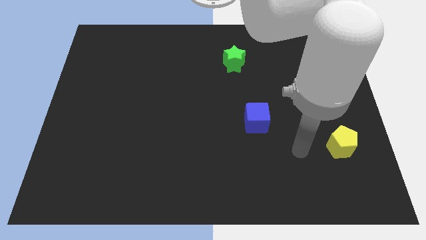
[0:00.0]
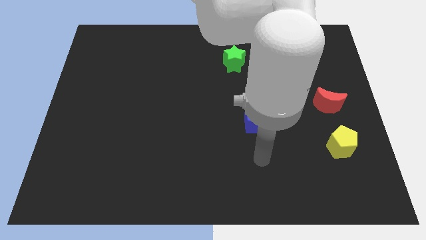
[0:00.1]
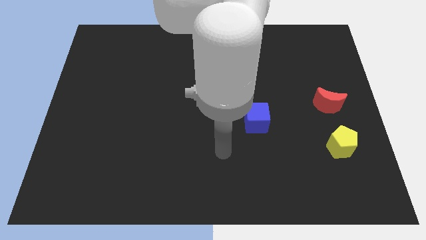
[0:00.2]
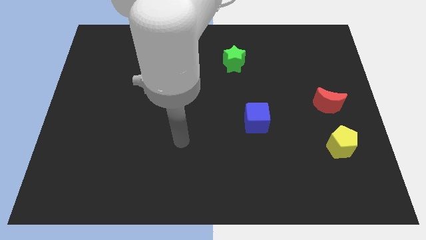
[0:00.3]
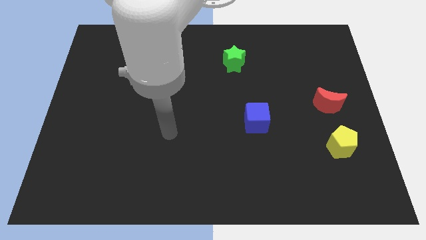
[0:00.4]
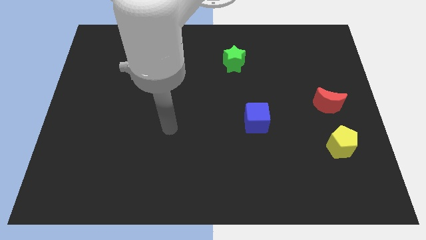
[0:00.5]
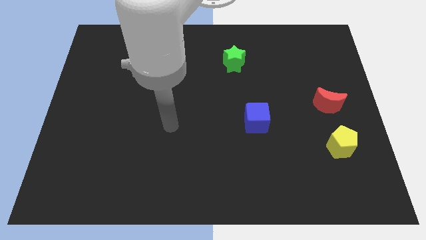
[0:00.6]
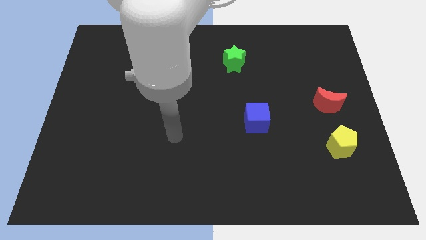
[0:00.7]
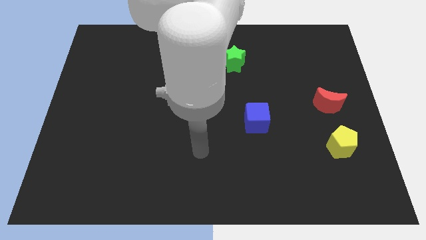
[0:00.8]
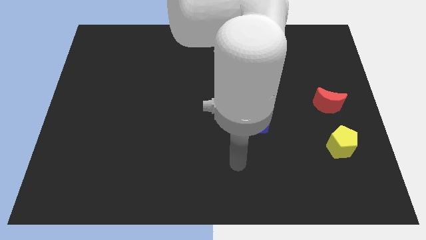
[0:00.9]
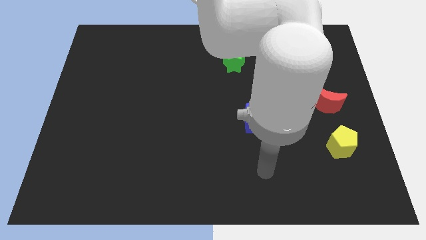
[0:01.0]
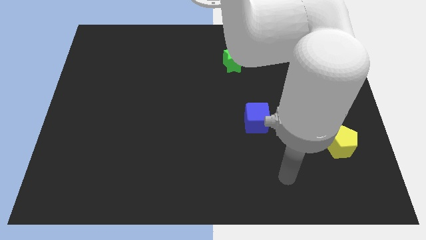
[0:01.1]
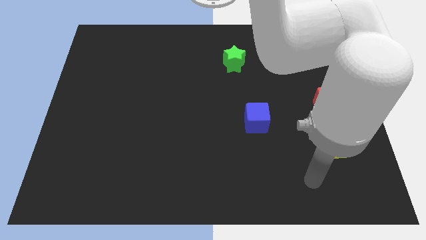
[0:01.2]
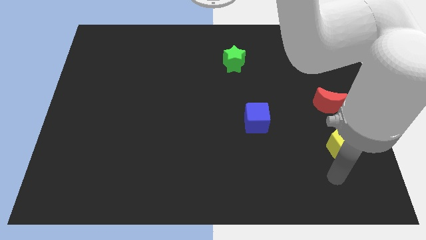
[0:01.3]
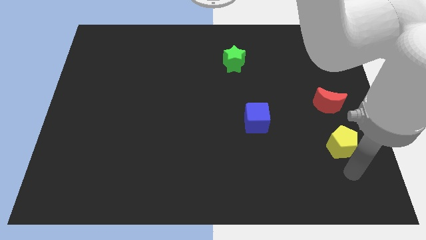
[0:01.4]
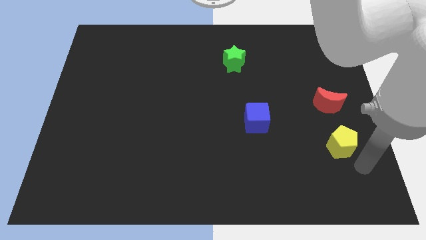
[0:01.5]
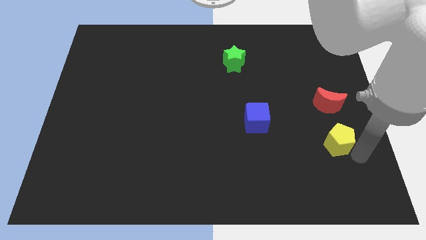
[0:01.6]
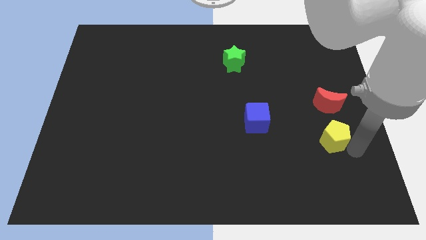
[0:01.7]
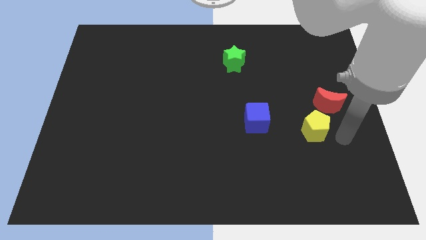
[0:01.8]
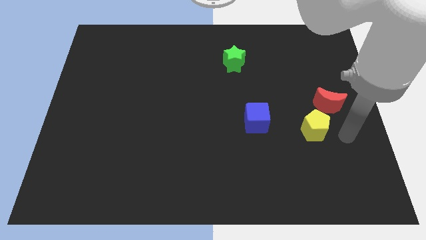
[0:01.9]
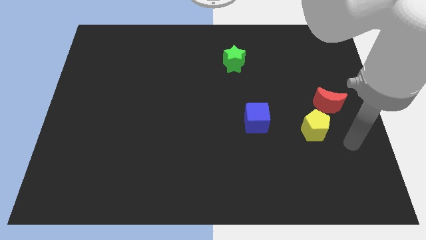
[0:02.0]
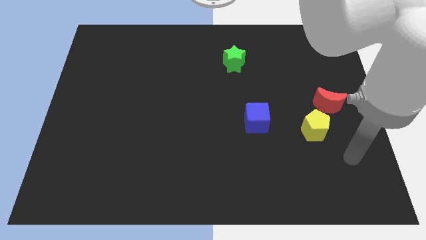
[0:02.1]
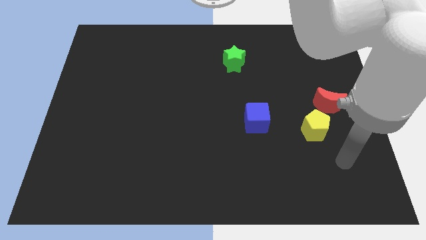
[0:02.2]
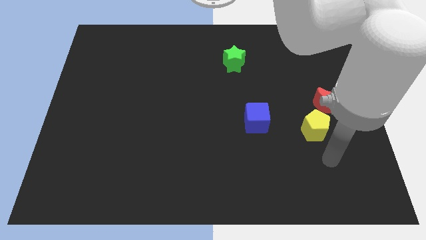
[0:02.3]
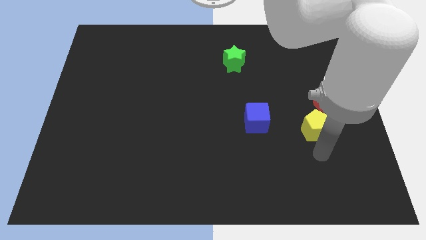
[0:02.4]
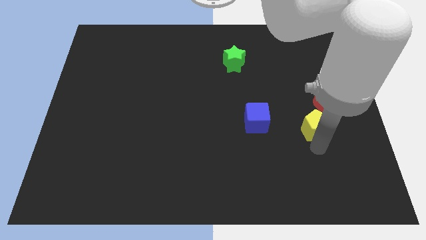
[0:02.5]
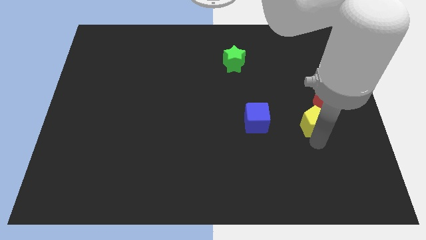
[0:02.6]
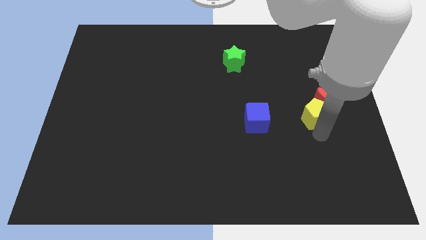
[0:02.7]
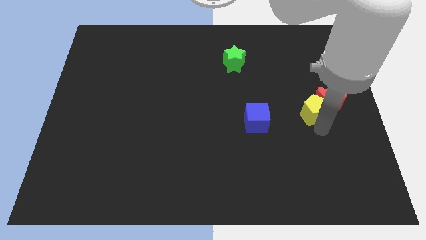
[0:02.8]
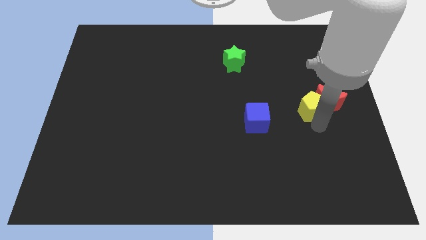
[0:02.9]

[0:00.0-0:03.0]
put the yellow block towards the red block

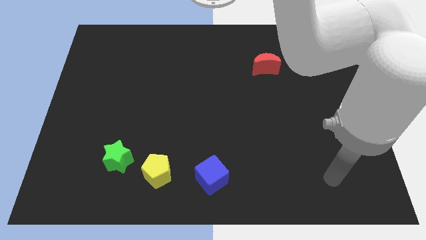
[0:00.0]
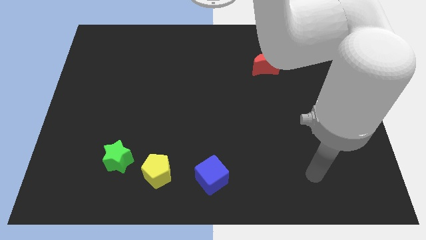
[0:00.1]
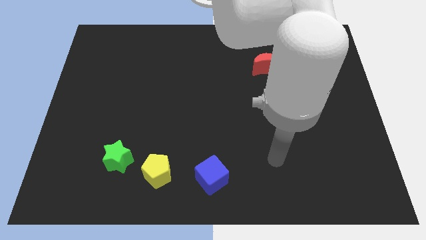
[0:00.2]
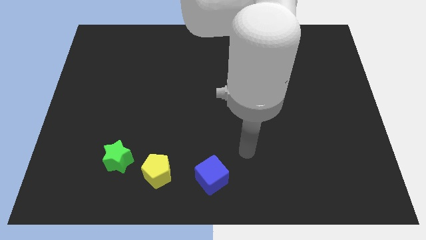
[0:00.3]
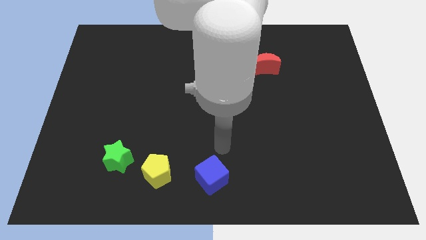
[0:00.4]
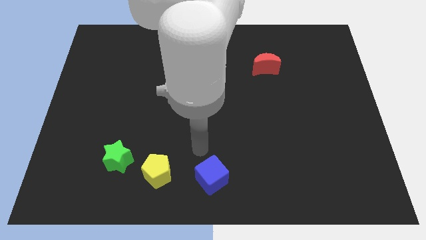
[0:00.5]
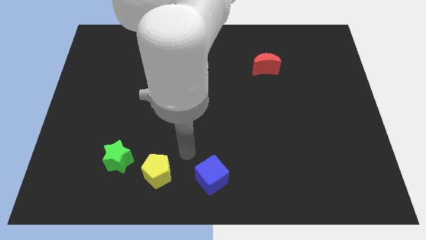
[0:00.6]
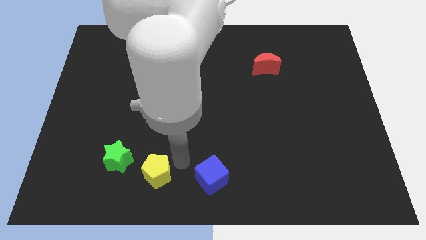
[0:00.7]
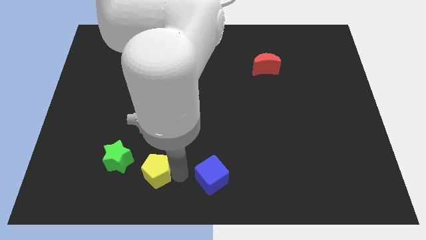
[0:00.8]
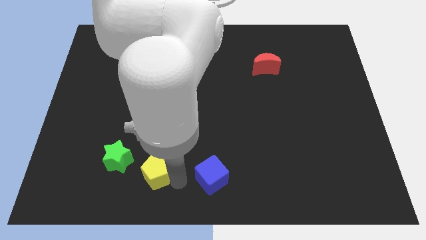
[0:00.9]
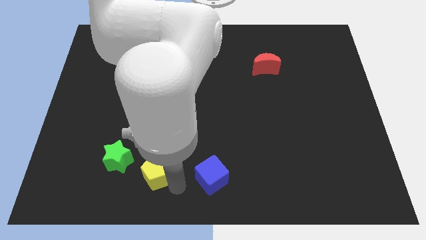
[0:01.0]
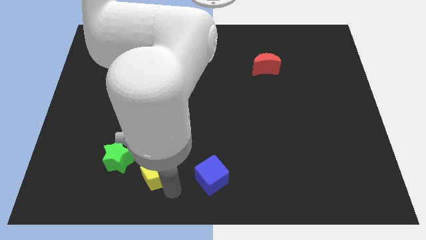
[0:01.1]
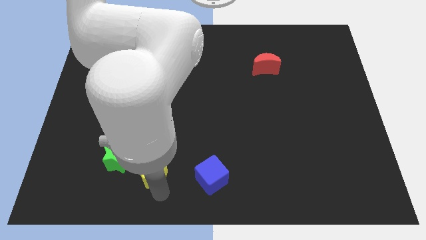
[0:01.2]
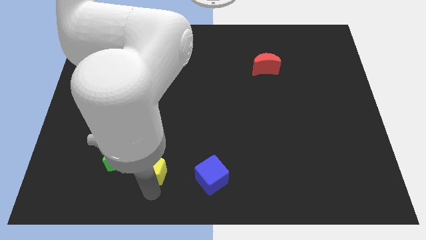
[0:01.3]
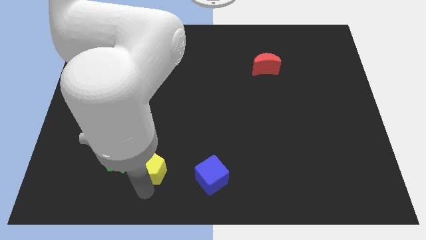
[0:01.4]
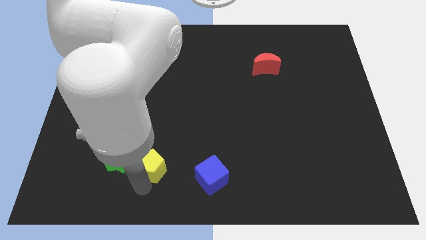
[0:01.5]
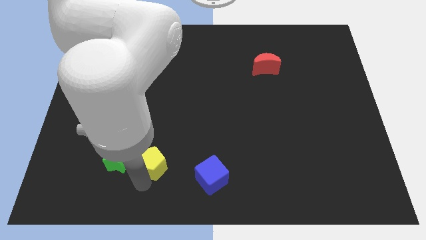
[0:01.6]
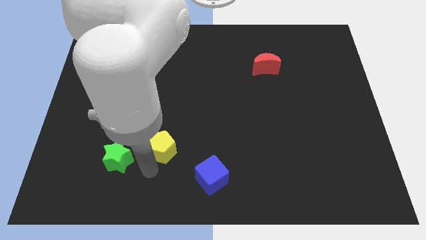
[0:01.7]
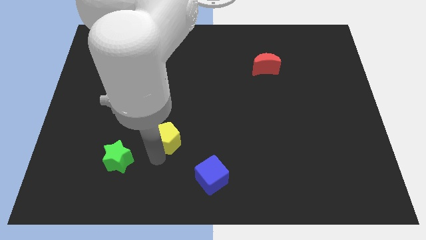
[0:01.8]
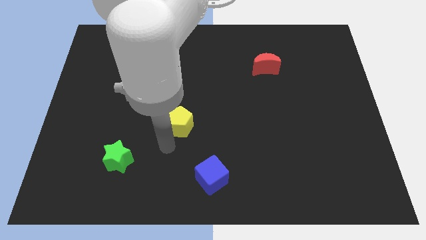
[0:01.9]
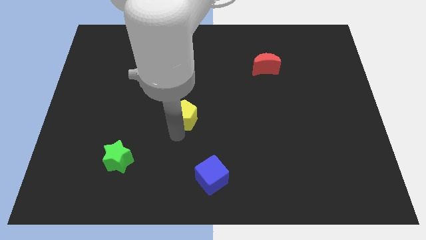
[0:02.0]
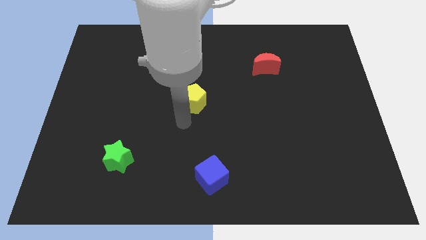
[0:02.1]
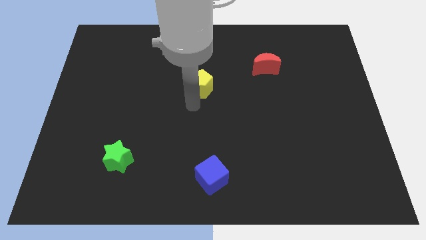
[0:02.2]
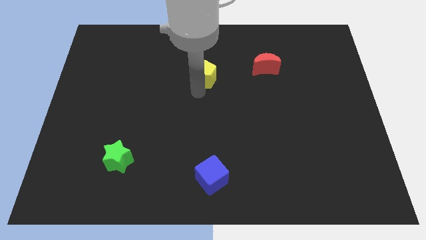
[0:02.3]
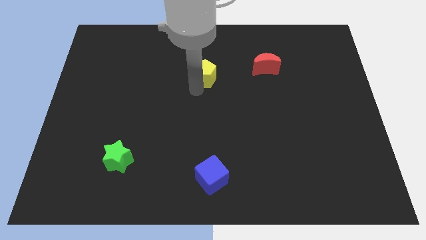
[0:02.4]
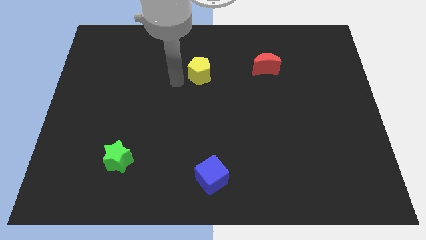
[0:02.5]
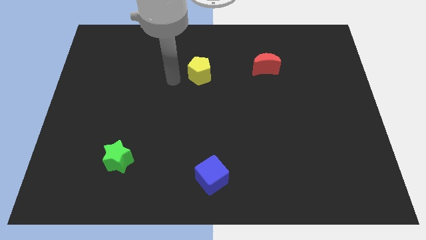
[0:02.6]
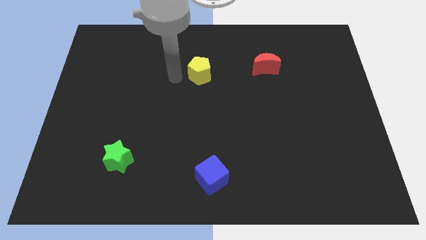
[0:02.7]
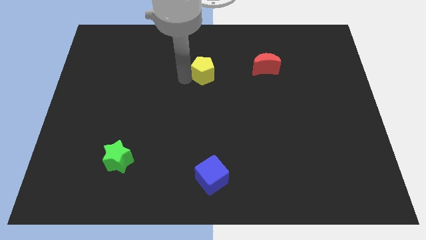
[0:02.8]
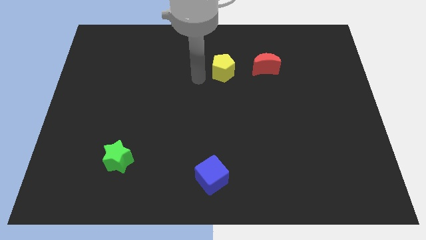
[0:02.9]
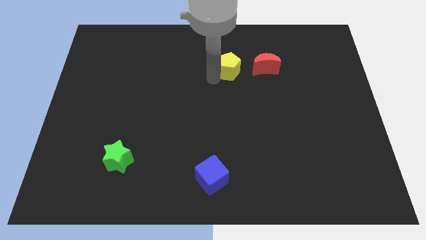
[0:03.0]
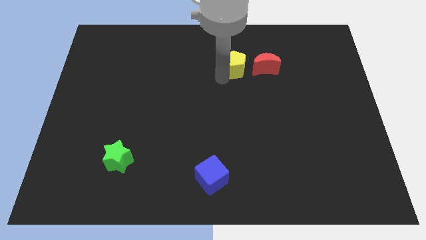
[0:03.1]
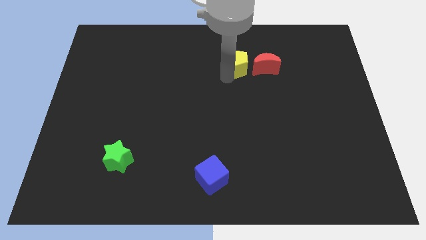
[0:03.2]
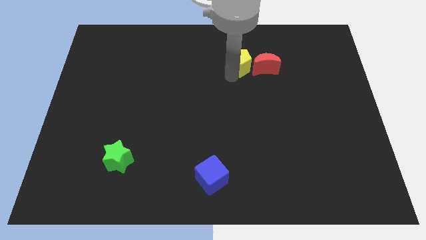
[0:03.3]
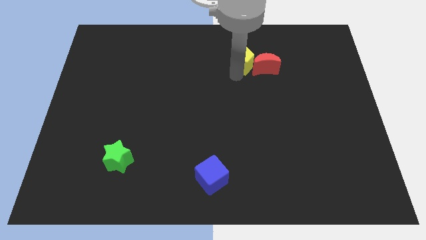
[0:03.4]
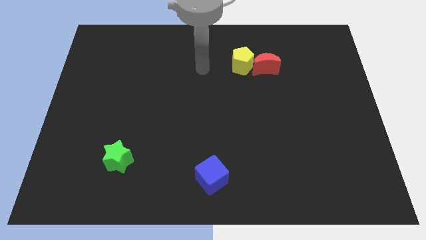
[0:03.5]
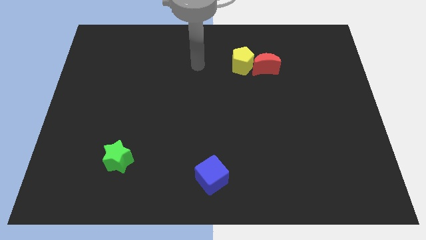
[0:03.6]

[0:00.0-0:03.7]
slide the yellow block next to the red block

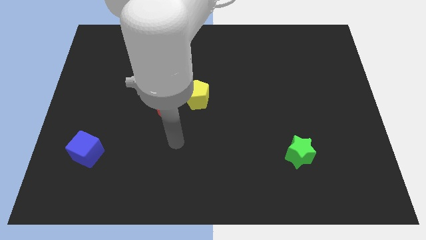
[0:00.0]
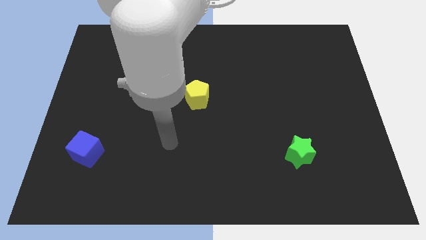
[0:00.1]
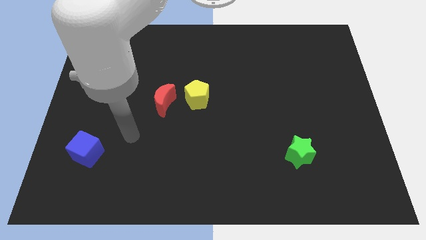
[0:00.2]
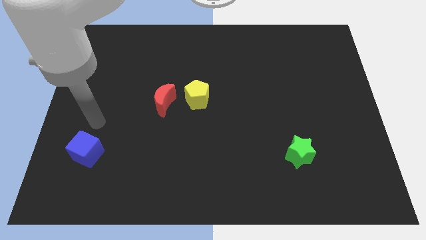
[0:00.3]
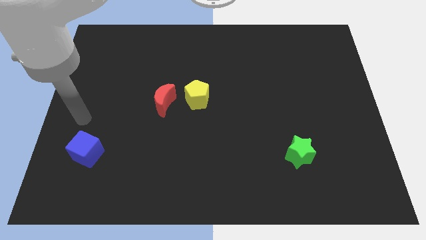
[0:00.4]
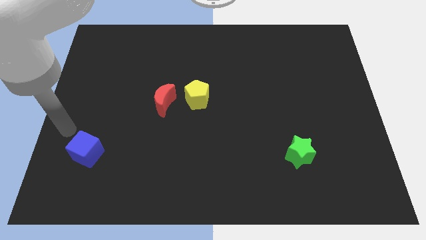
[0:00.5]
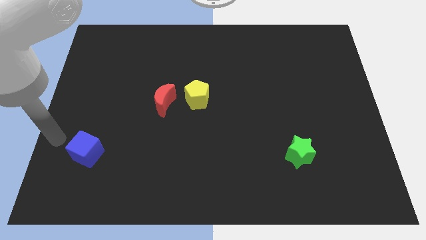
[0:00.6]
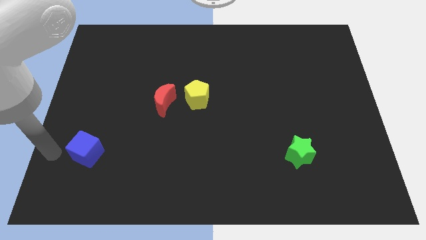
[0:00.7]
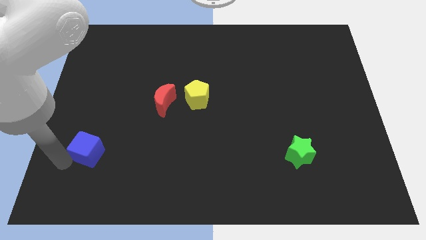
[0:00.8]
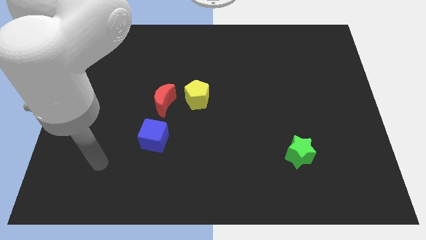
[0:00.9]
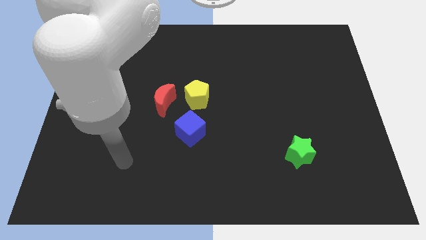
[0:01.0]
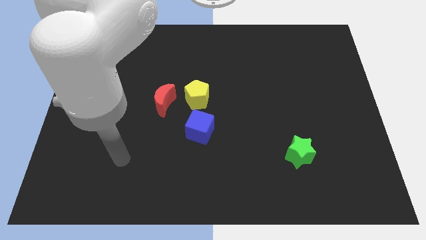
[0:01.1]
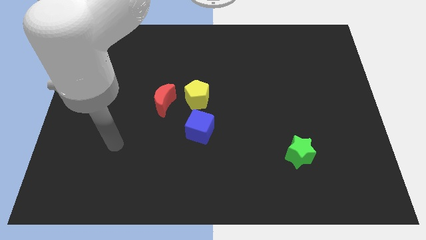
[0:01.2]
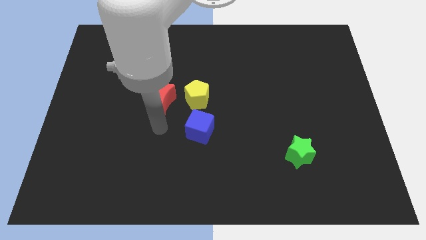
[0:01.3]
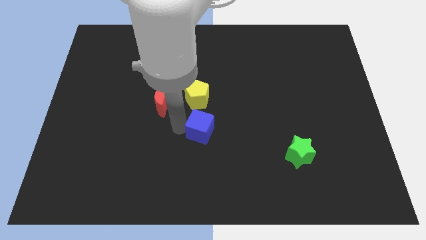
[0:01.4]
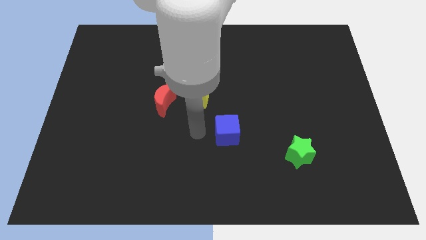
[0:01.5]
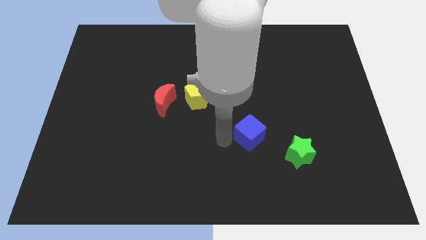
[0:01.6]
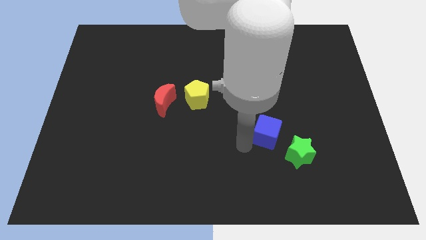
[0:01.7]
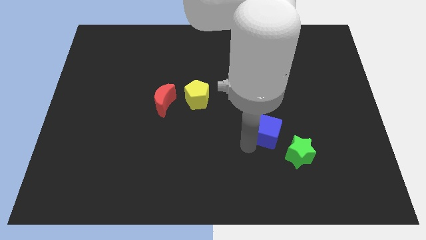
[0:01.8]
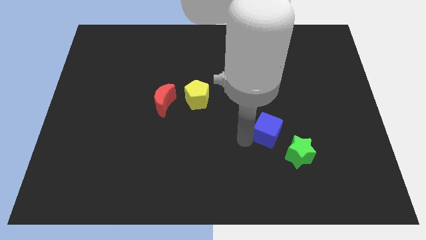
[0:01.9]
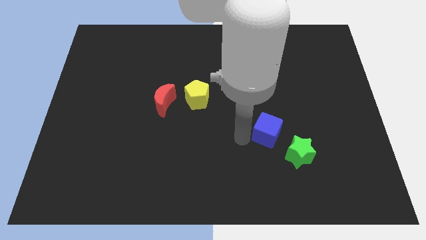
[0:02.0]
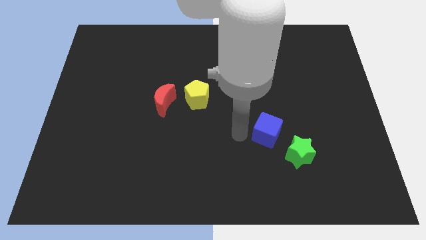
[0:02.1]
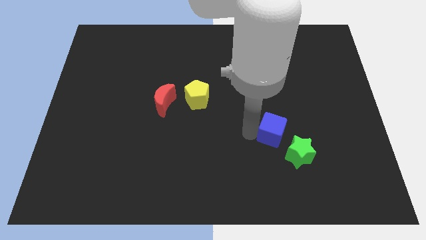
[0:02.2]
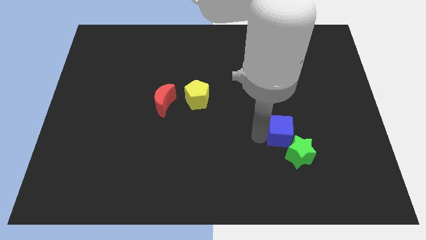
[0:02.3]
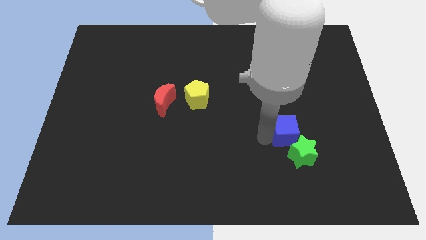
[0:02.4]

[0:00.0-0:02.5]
move the cube to the green block
